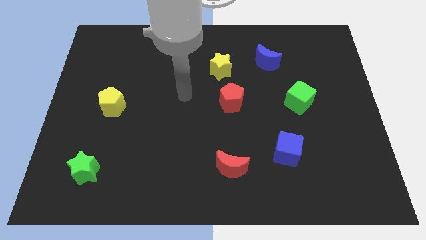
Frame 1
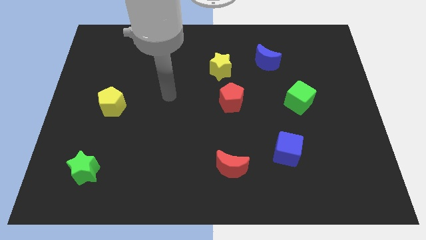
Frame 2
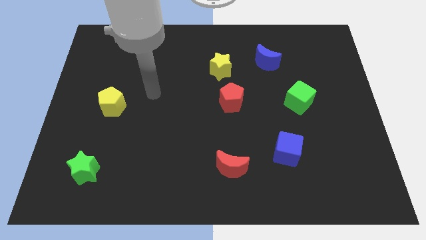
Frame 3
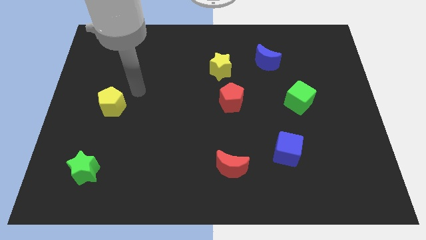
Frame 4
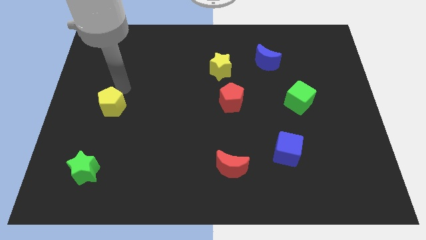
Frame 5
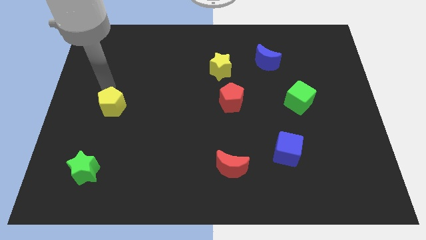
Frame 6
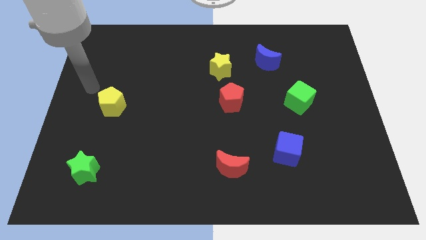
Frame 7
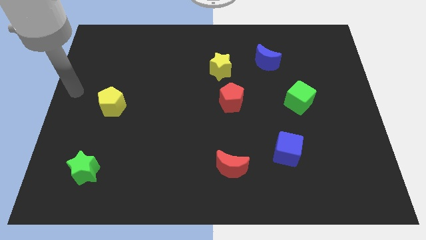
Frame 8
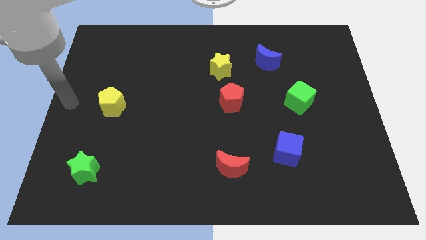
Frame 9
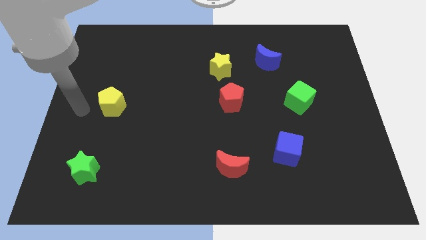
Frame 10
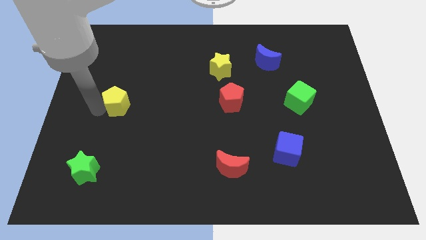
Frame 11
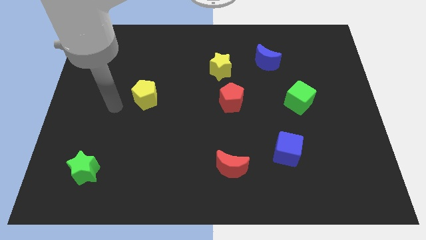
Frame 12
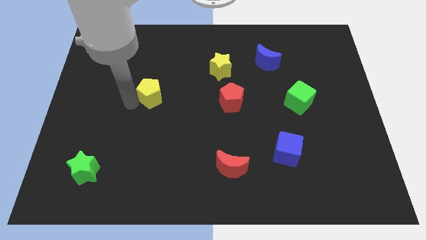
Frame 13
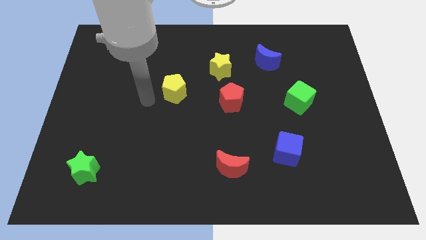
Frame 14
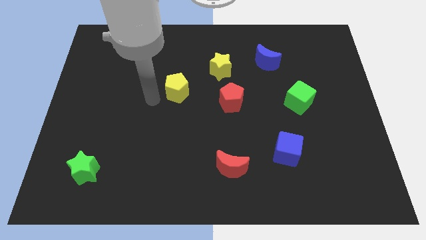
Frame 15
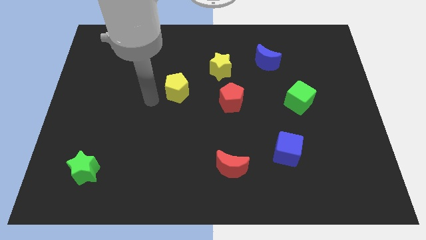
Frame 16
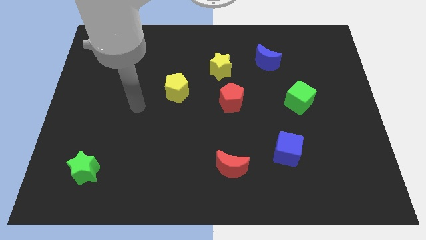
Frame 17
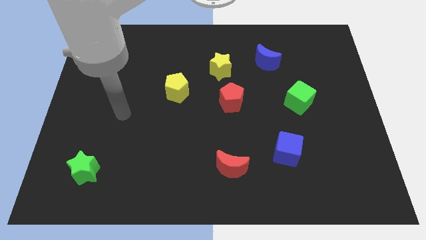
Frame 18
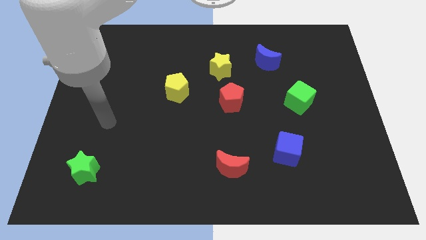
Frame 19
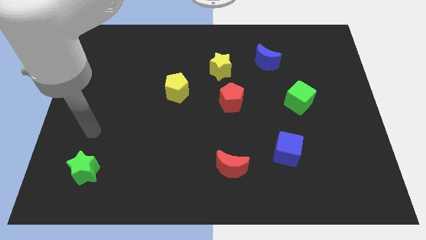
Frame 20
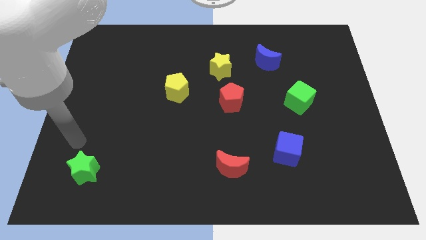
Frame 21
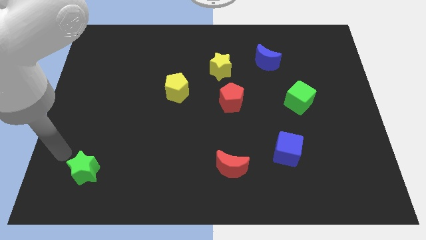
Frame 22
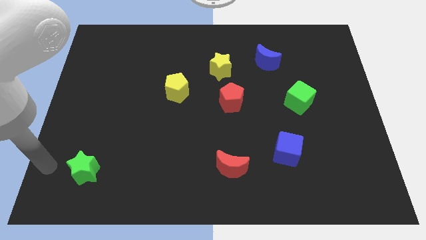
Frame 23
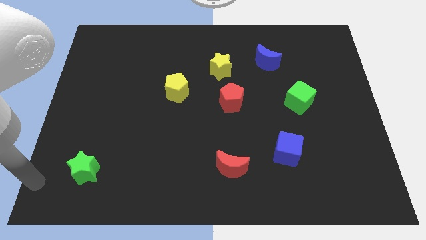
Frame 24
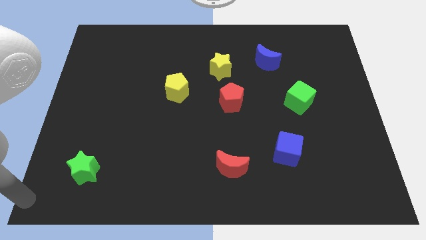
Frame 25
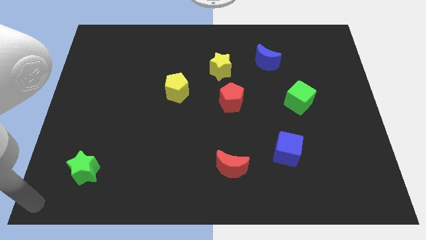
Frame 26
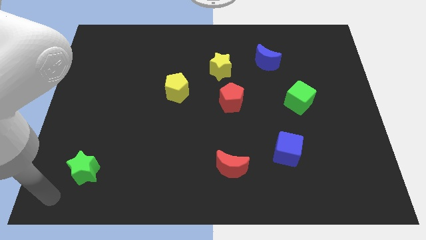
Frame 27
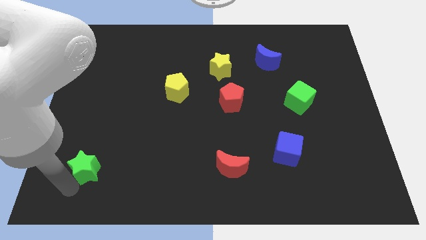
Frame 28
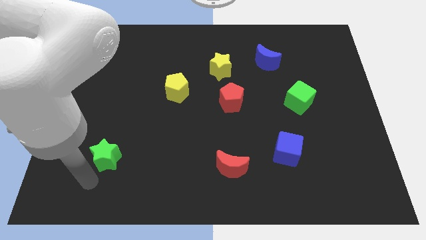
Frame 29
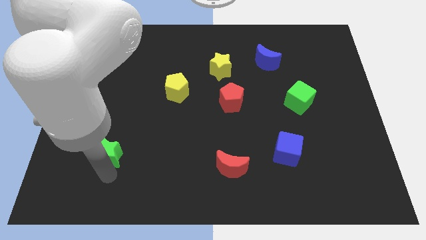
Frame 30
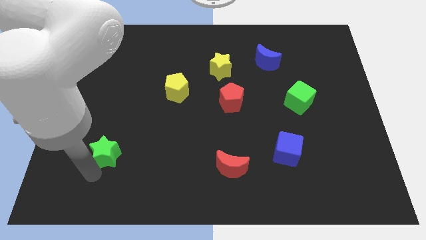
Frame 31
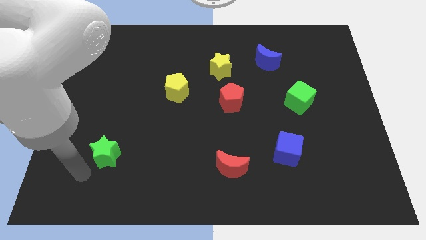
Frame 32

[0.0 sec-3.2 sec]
slide green star and the yellow pentagon diagonal to each other

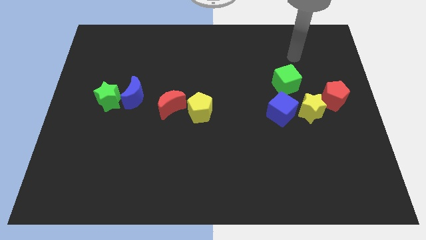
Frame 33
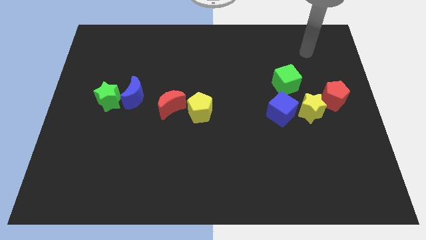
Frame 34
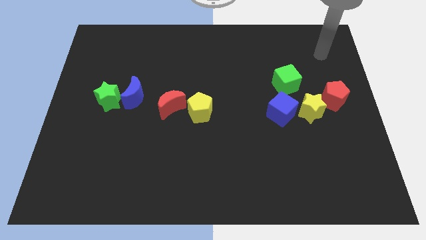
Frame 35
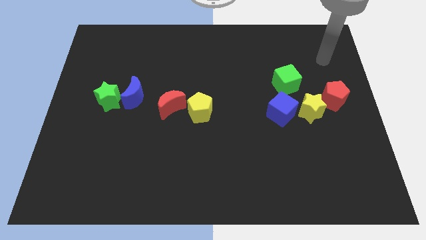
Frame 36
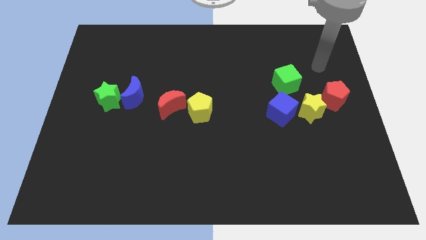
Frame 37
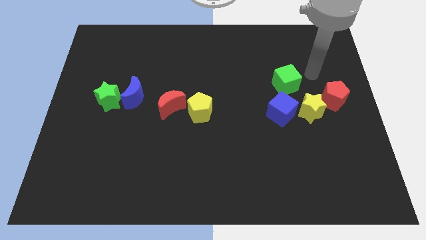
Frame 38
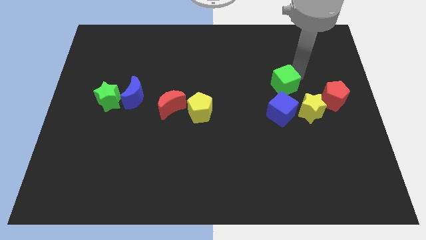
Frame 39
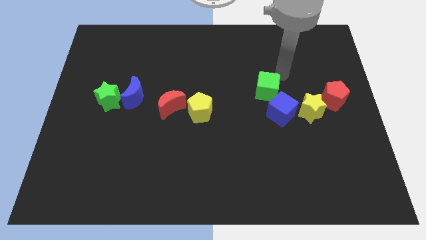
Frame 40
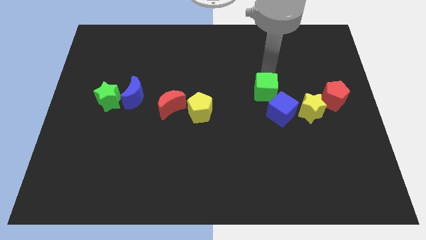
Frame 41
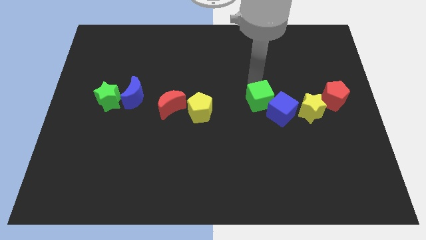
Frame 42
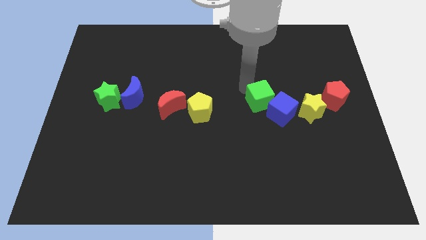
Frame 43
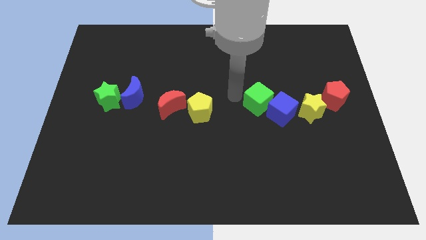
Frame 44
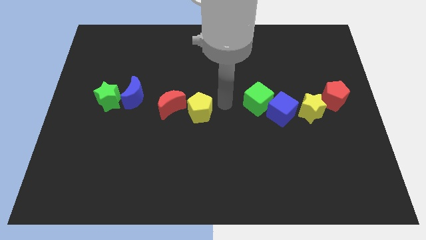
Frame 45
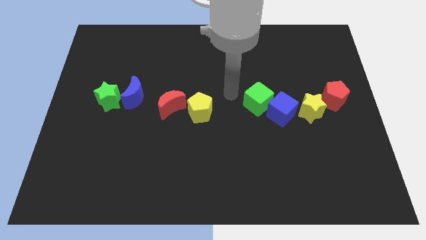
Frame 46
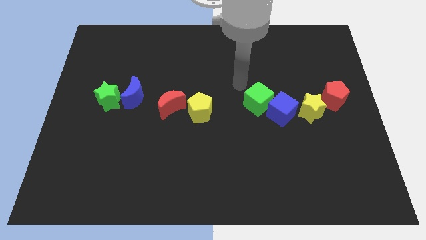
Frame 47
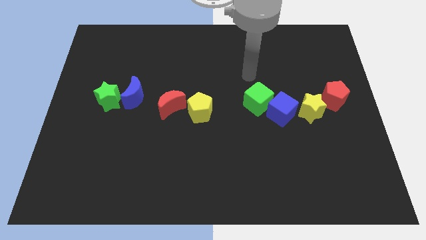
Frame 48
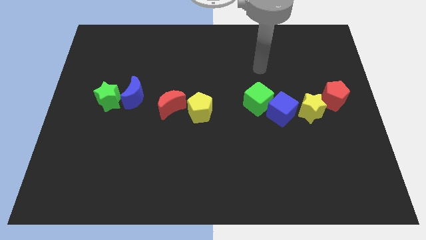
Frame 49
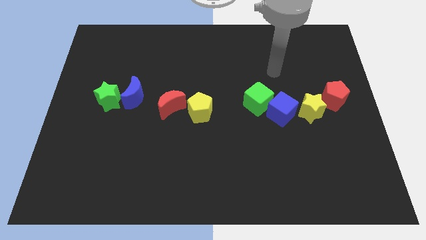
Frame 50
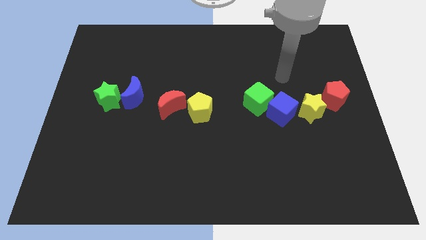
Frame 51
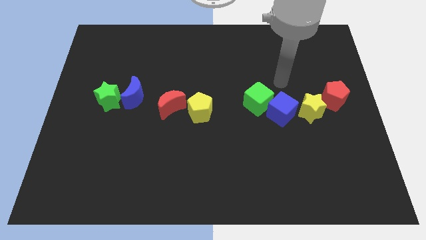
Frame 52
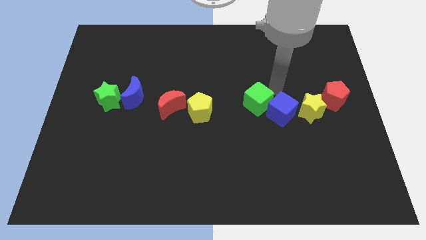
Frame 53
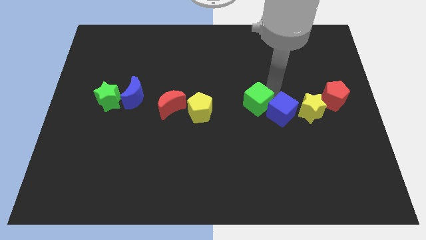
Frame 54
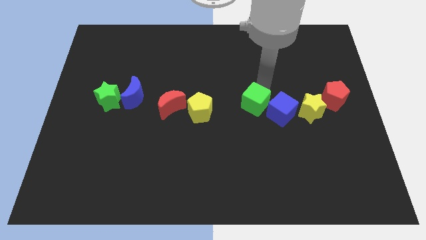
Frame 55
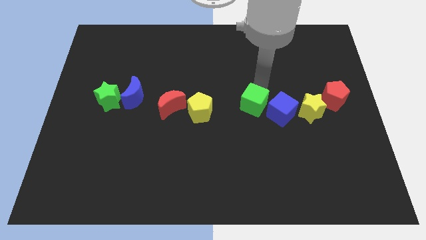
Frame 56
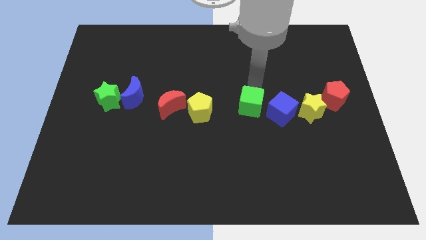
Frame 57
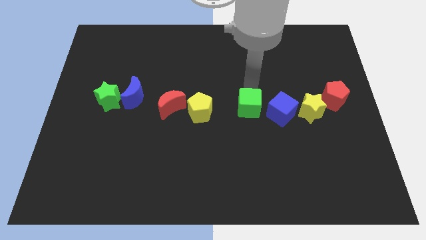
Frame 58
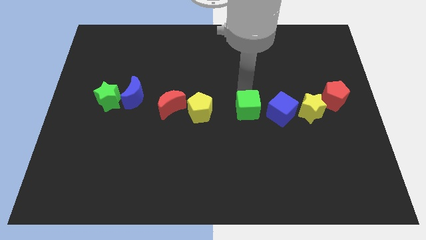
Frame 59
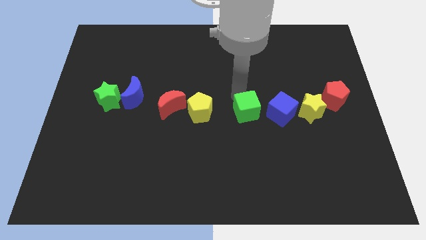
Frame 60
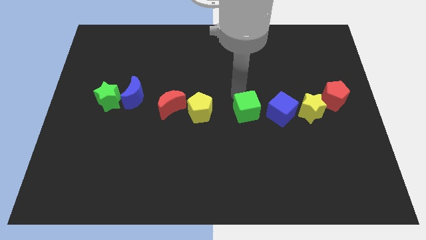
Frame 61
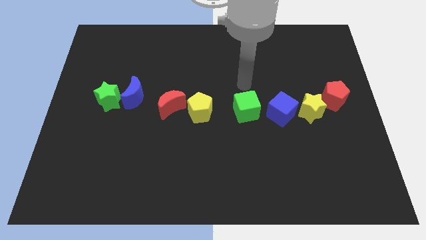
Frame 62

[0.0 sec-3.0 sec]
push the green cube to the left of blue cube

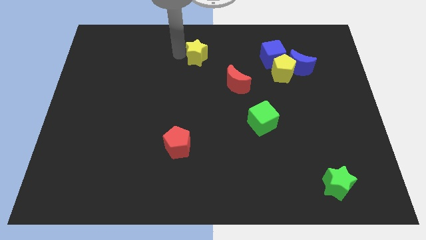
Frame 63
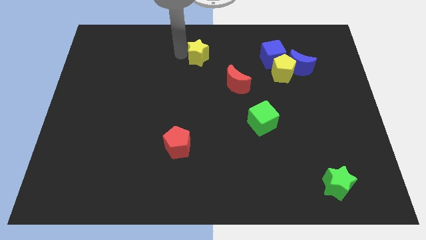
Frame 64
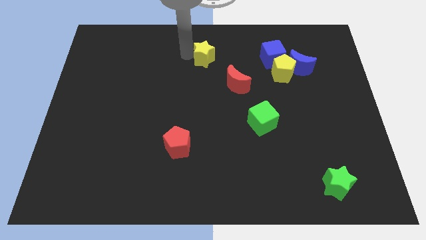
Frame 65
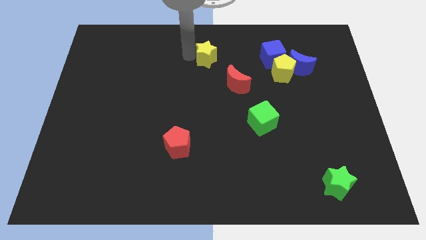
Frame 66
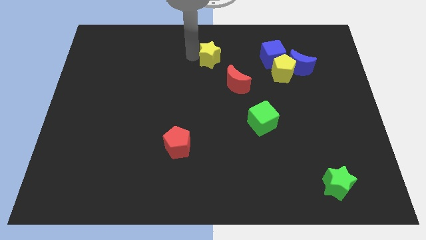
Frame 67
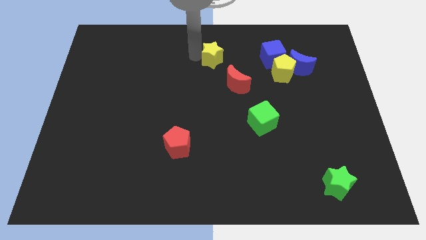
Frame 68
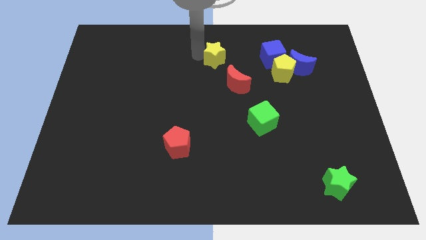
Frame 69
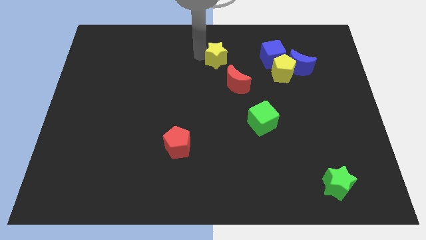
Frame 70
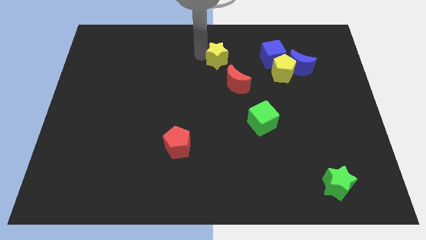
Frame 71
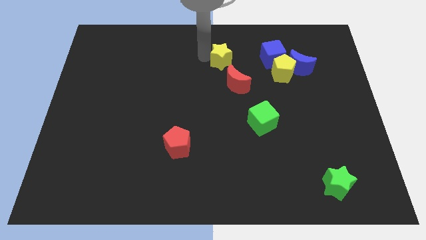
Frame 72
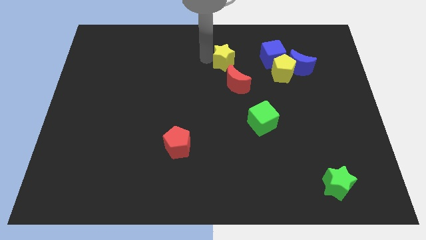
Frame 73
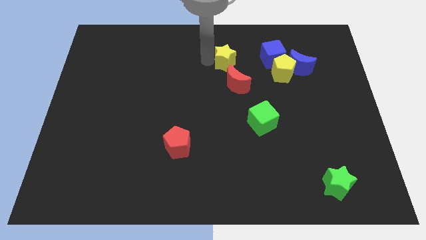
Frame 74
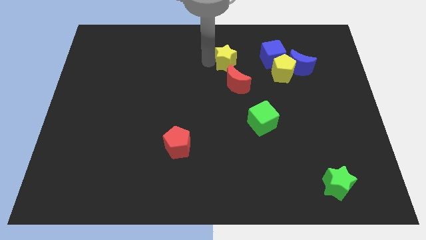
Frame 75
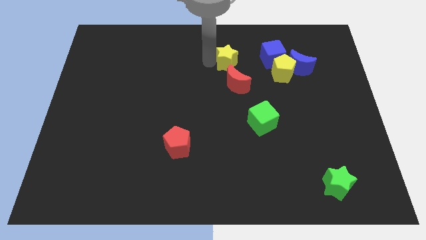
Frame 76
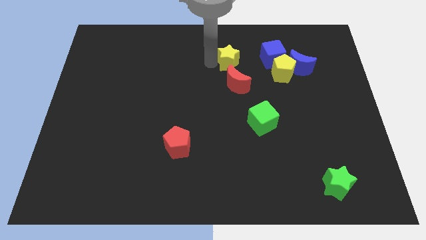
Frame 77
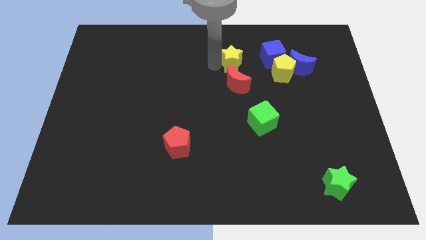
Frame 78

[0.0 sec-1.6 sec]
move the yellow star to the top of the red crescent

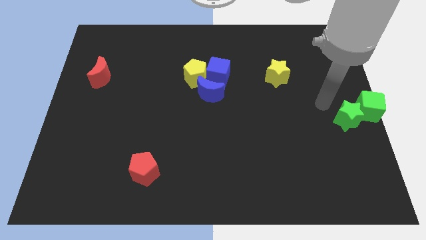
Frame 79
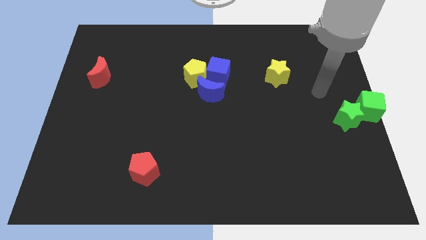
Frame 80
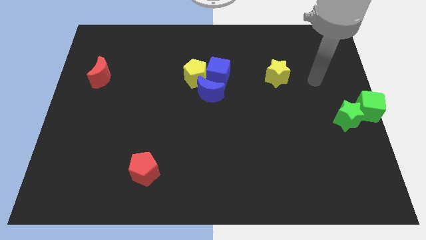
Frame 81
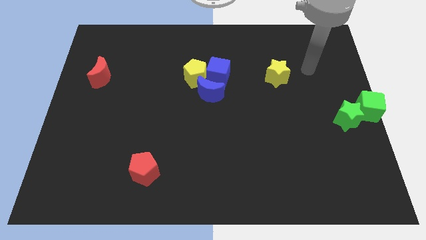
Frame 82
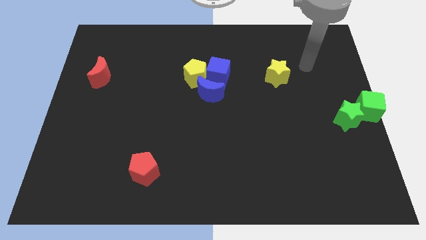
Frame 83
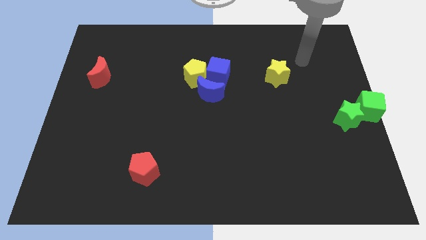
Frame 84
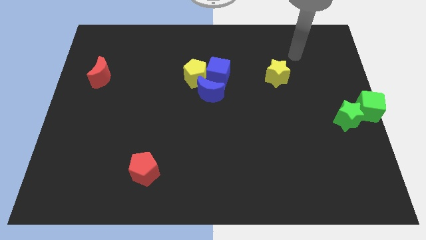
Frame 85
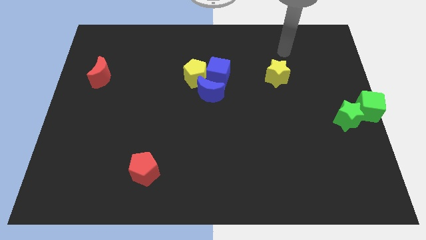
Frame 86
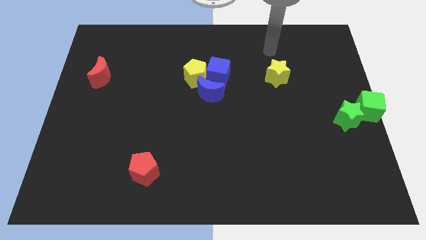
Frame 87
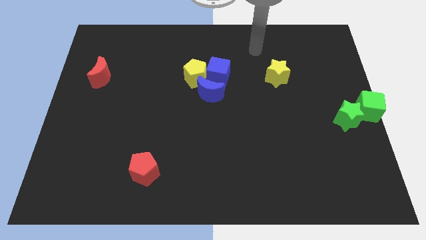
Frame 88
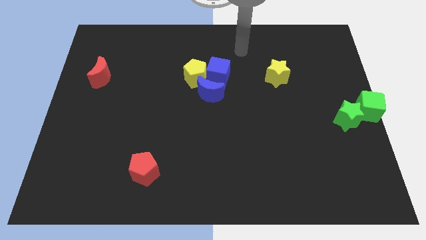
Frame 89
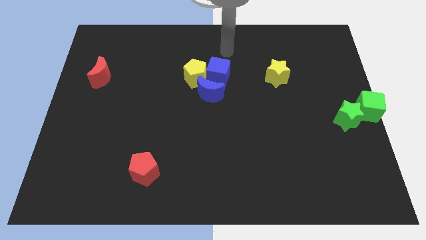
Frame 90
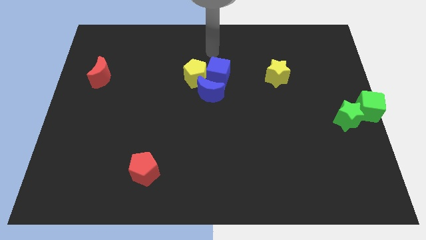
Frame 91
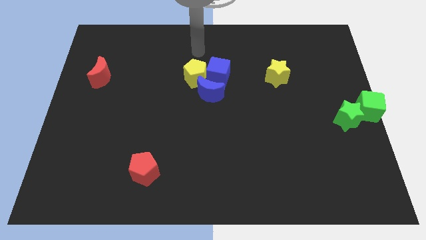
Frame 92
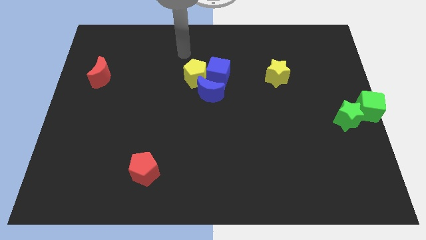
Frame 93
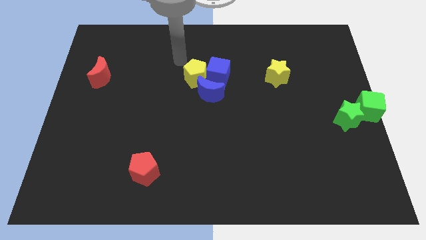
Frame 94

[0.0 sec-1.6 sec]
move your arm towards top of the yellow pentagon
